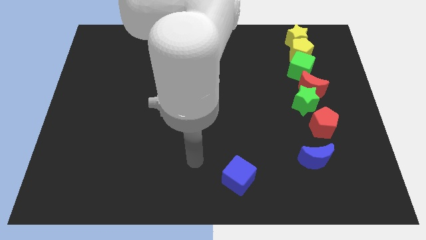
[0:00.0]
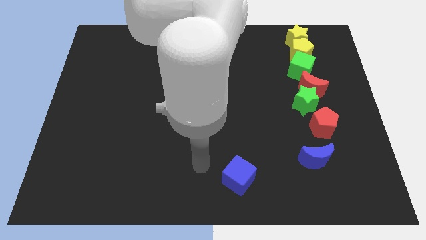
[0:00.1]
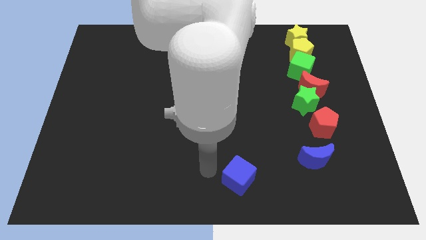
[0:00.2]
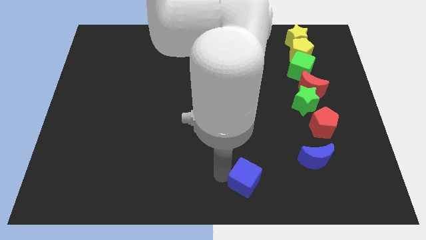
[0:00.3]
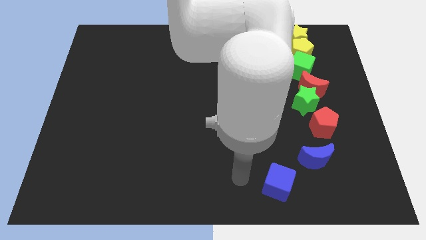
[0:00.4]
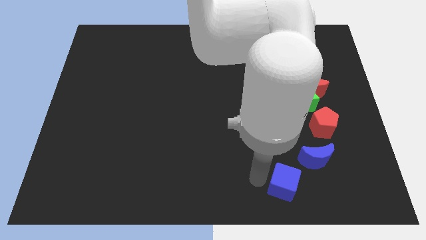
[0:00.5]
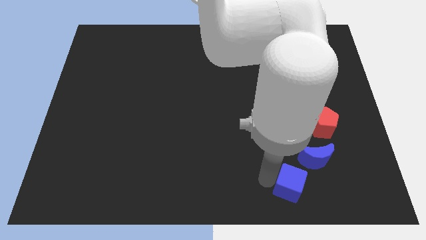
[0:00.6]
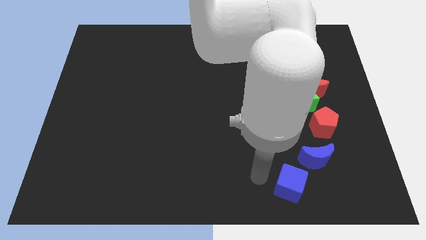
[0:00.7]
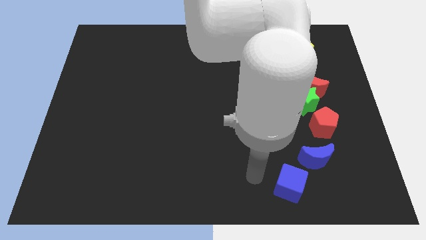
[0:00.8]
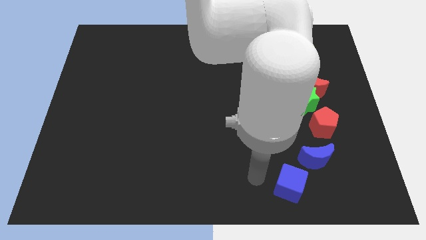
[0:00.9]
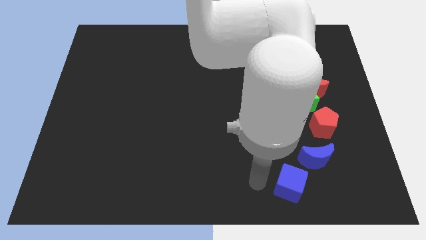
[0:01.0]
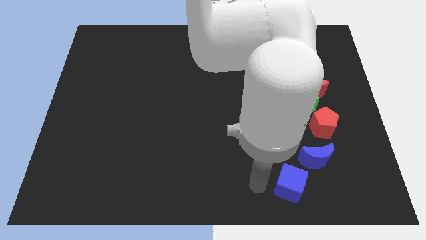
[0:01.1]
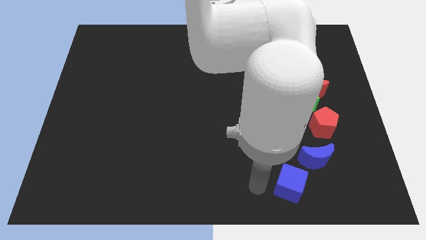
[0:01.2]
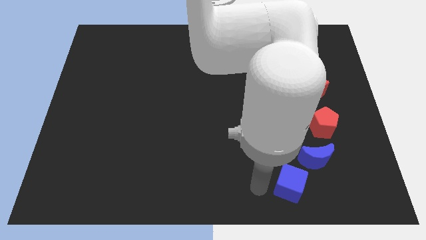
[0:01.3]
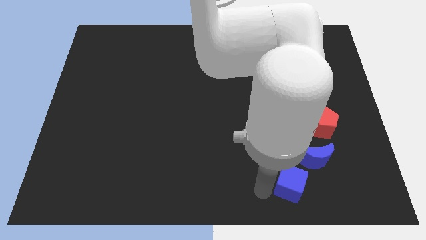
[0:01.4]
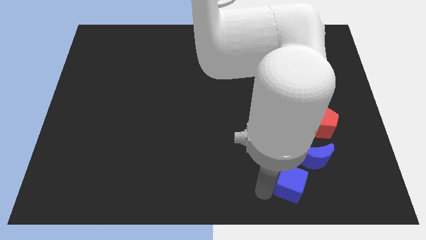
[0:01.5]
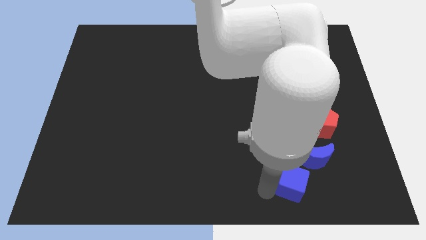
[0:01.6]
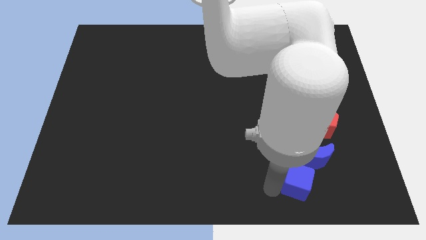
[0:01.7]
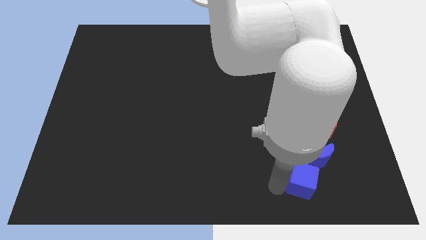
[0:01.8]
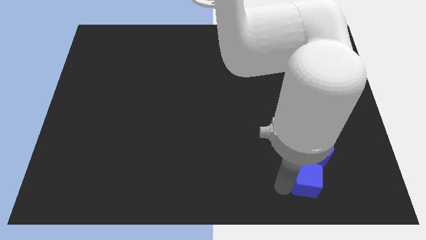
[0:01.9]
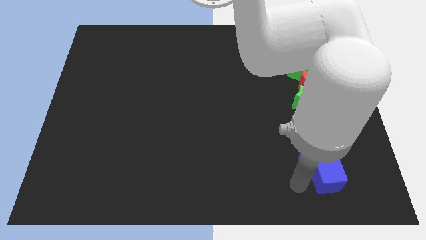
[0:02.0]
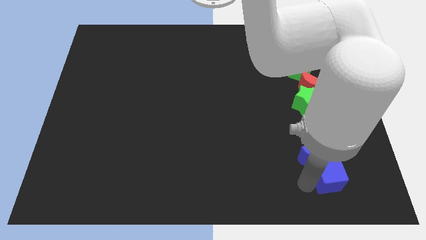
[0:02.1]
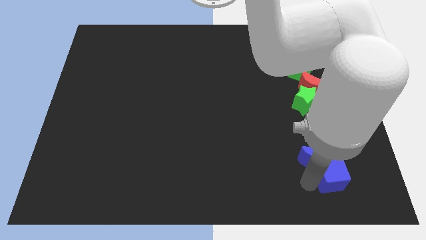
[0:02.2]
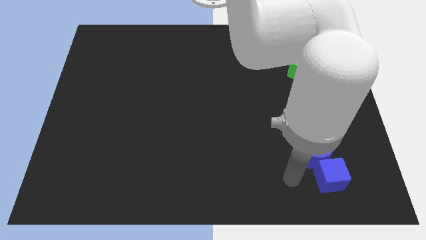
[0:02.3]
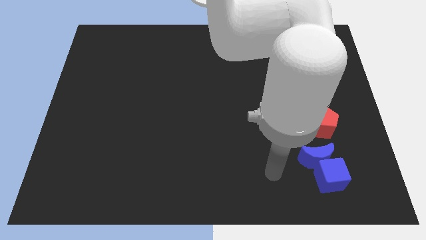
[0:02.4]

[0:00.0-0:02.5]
place the blue cube below the blue moon

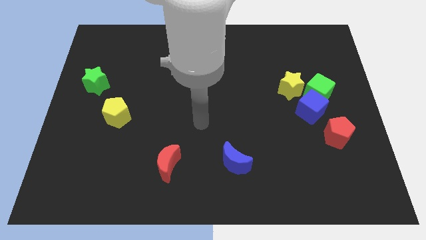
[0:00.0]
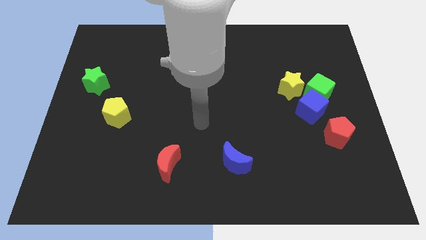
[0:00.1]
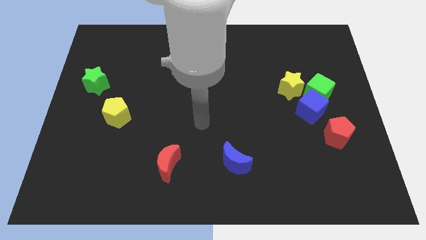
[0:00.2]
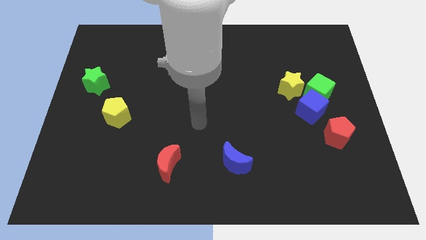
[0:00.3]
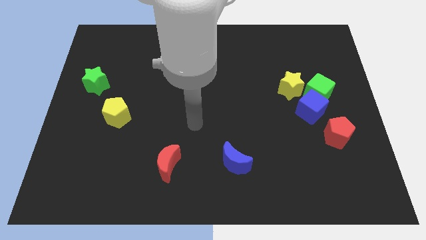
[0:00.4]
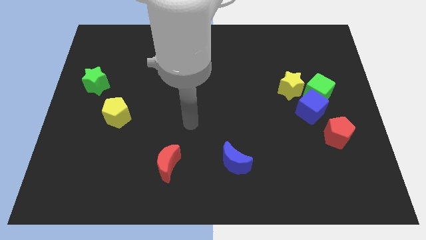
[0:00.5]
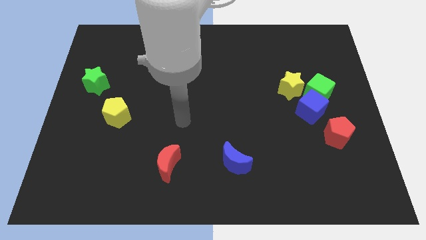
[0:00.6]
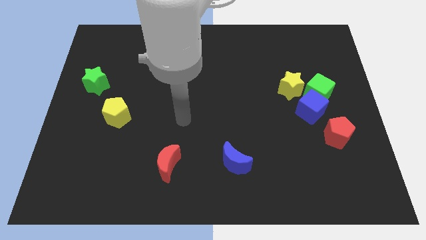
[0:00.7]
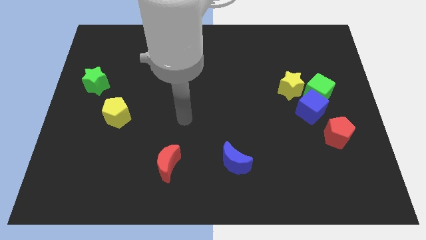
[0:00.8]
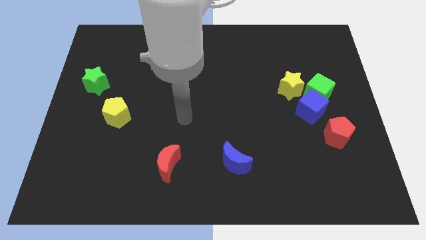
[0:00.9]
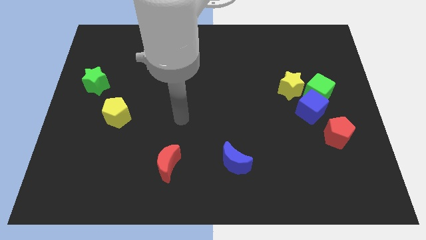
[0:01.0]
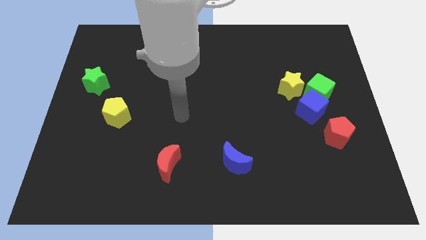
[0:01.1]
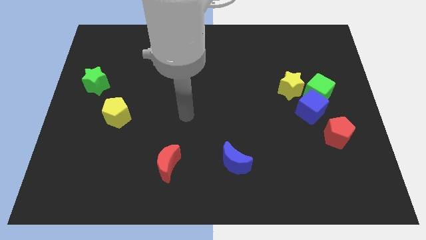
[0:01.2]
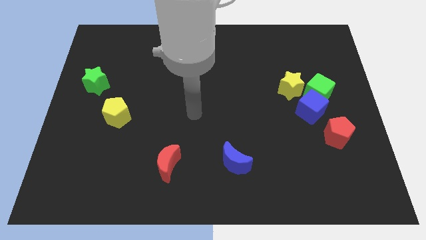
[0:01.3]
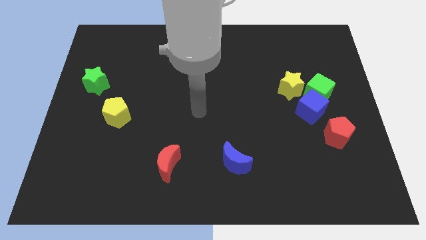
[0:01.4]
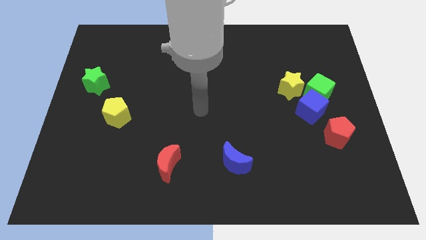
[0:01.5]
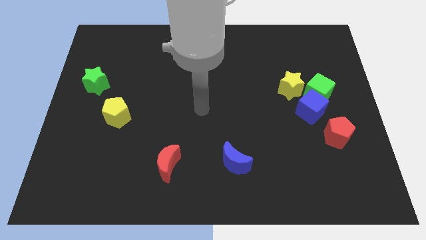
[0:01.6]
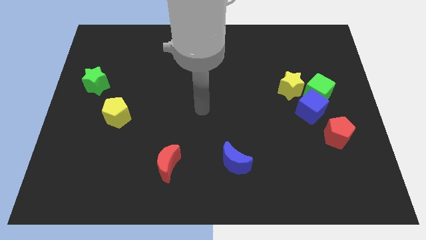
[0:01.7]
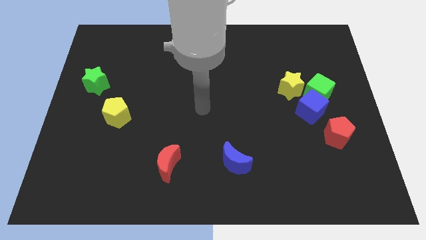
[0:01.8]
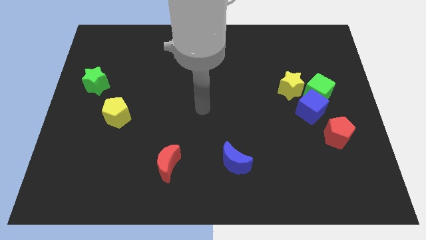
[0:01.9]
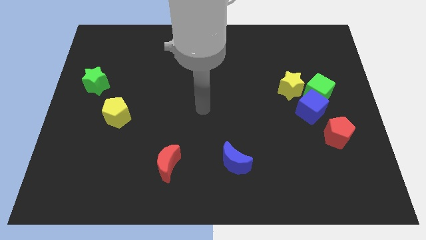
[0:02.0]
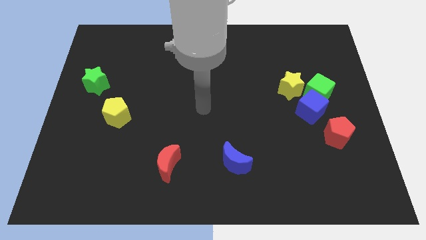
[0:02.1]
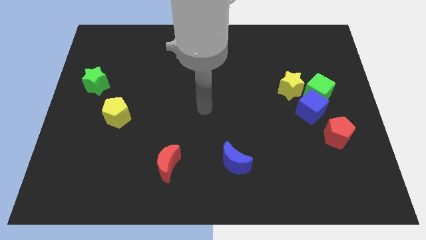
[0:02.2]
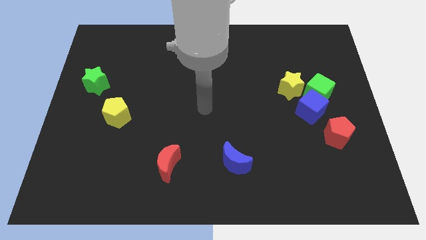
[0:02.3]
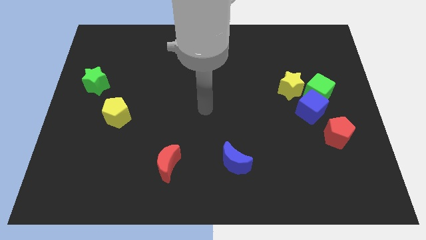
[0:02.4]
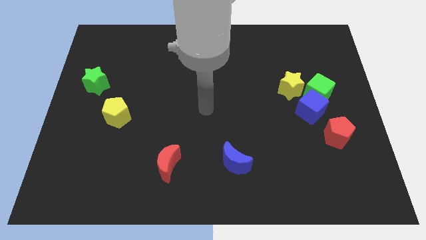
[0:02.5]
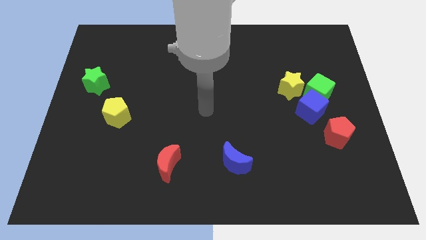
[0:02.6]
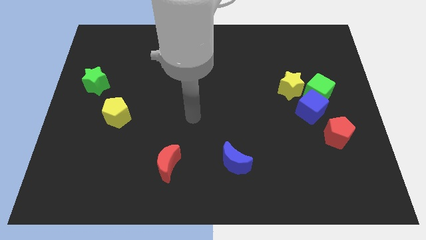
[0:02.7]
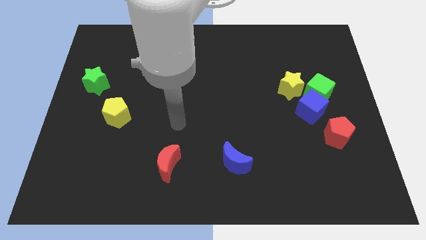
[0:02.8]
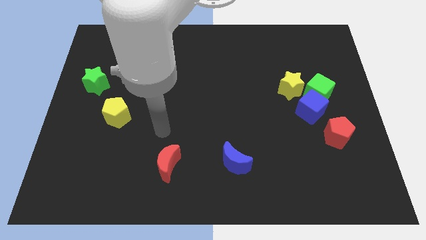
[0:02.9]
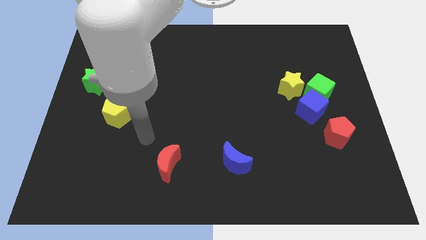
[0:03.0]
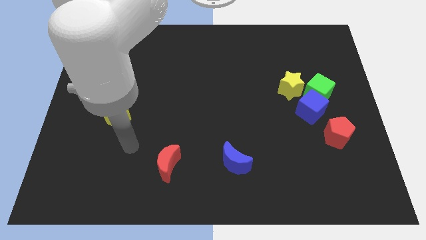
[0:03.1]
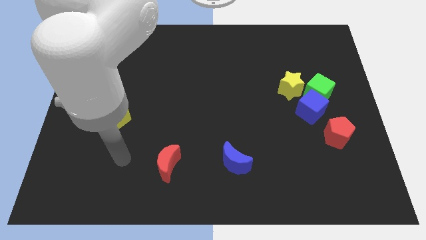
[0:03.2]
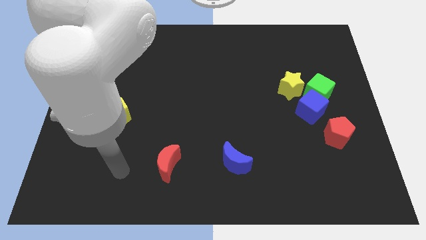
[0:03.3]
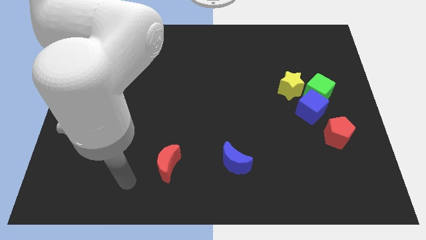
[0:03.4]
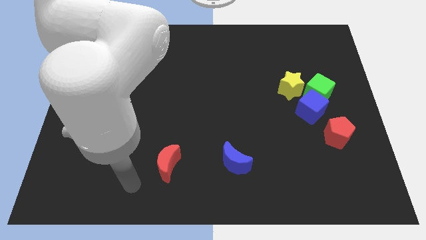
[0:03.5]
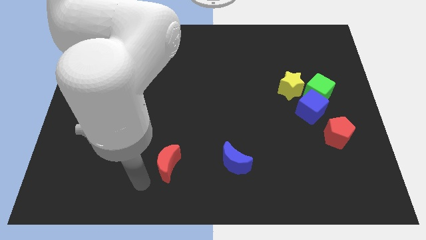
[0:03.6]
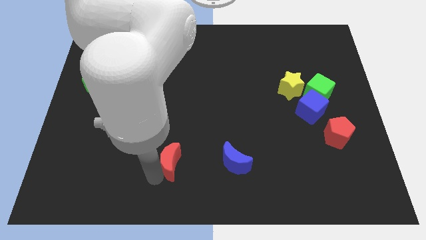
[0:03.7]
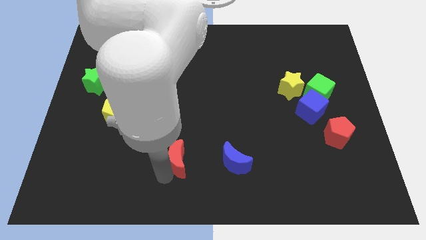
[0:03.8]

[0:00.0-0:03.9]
place your arm left to red moon

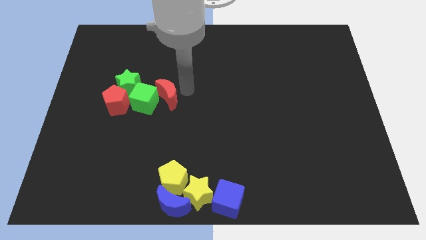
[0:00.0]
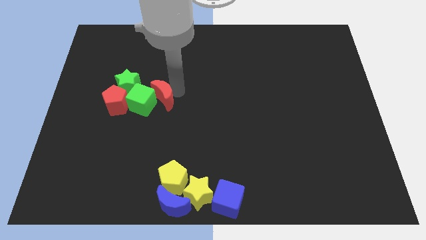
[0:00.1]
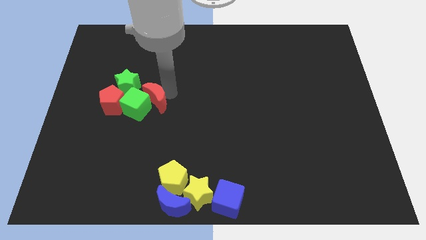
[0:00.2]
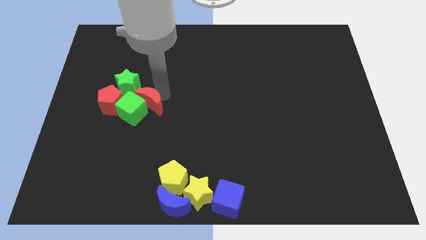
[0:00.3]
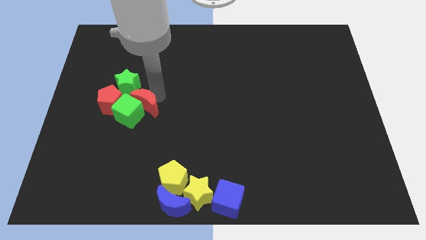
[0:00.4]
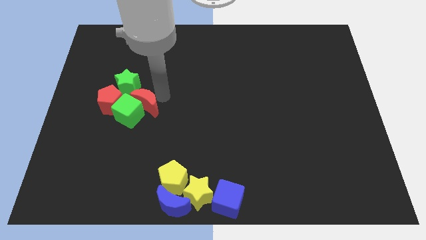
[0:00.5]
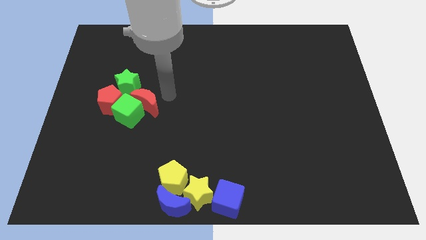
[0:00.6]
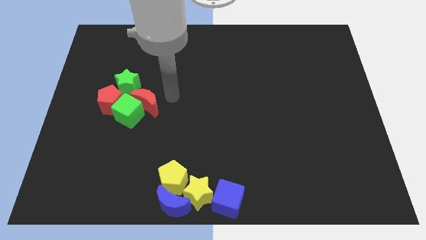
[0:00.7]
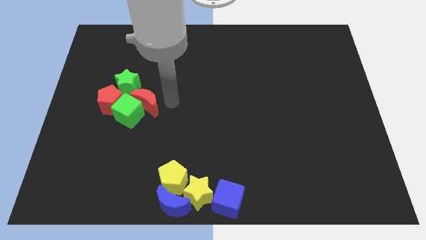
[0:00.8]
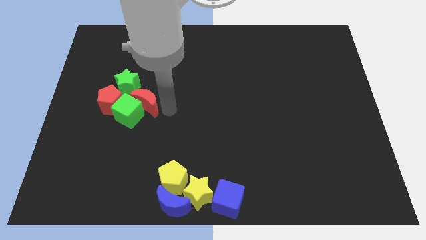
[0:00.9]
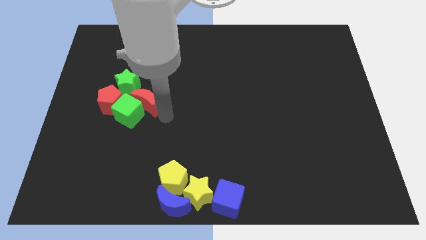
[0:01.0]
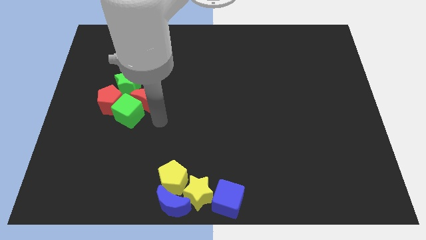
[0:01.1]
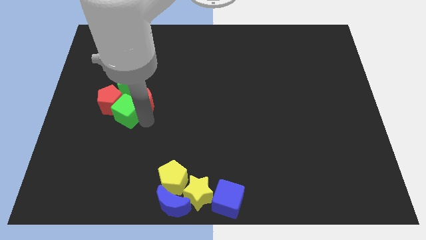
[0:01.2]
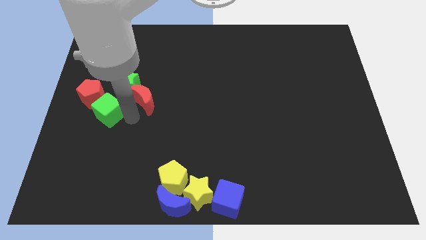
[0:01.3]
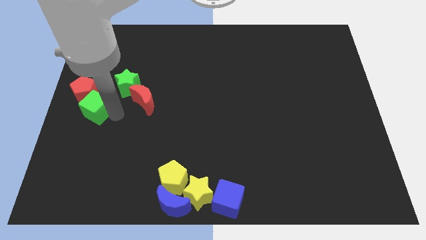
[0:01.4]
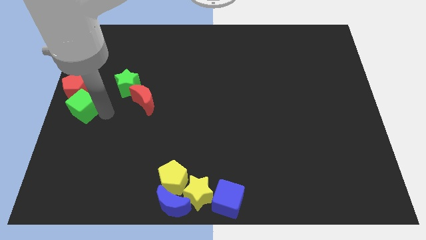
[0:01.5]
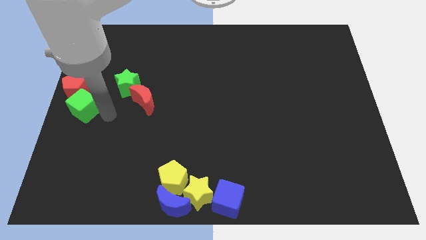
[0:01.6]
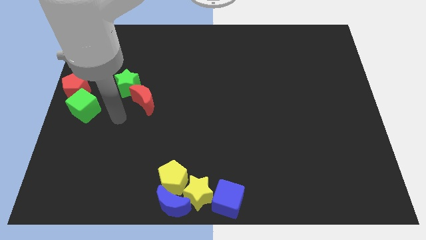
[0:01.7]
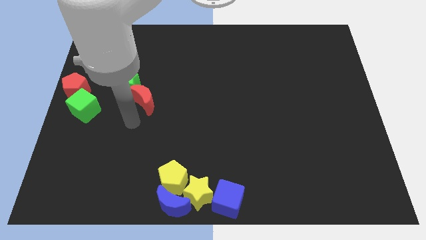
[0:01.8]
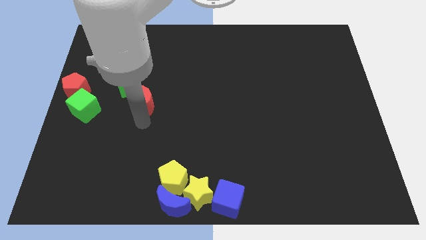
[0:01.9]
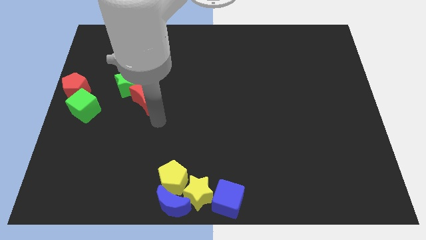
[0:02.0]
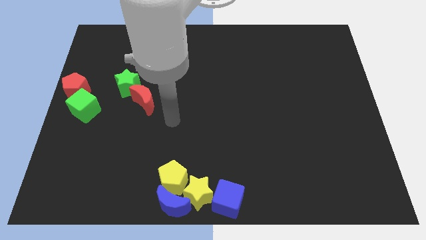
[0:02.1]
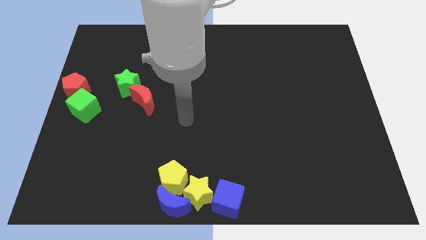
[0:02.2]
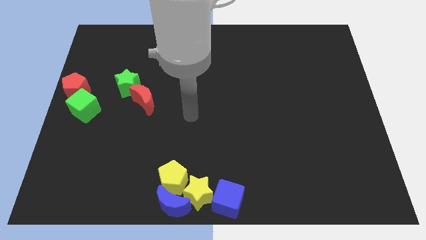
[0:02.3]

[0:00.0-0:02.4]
move the red pentagon and green cube to the left center
